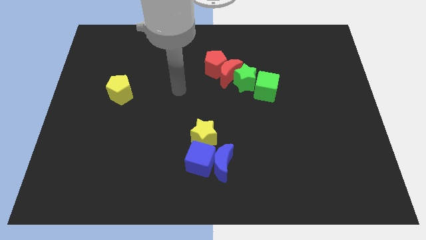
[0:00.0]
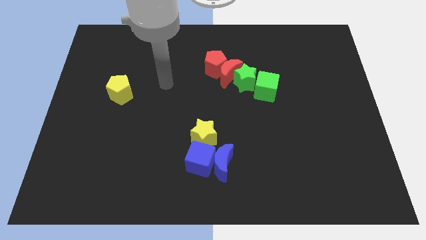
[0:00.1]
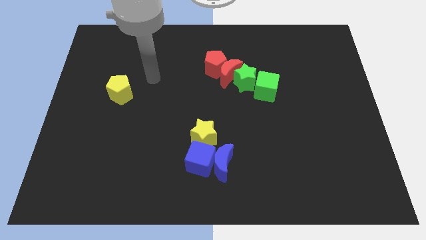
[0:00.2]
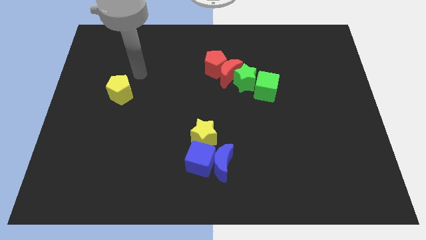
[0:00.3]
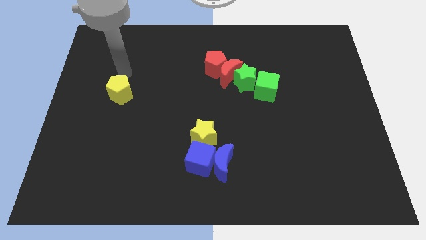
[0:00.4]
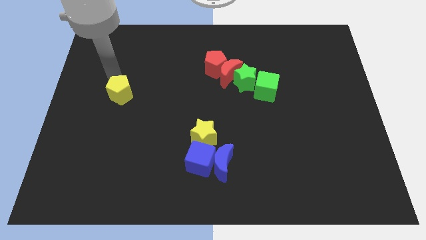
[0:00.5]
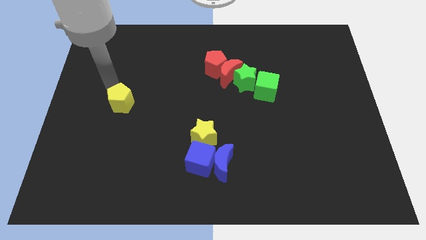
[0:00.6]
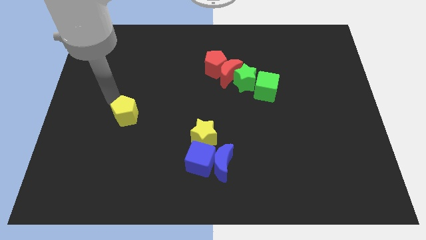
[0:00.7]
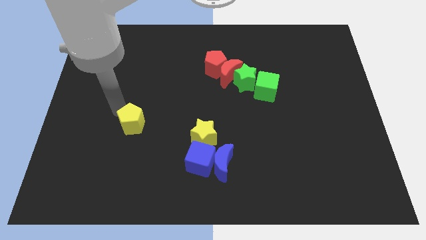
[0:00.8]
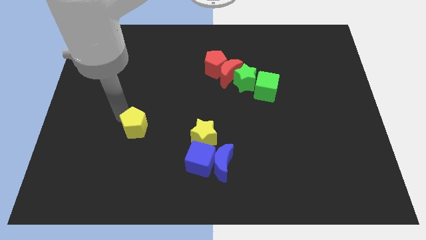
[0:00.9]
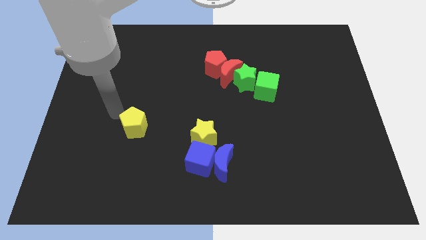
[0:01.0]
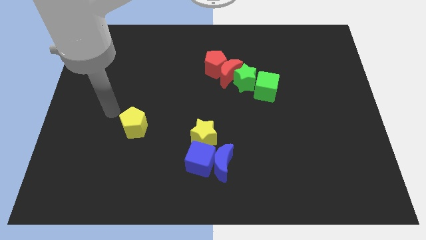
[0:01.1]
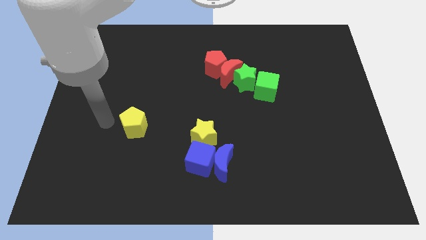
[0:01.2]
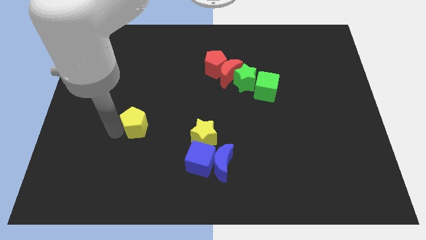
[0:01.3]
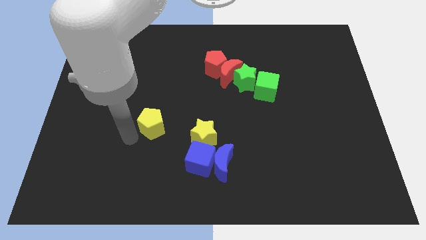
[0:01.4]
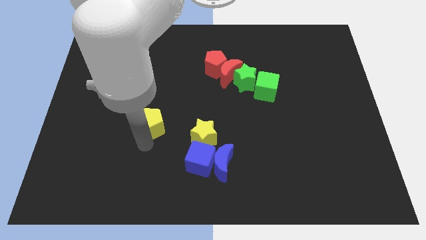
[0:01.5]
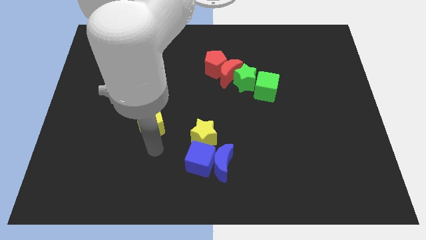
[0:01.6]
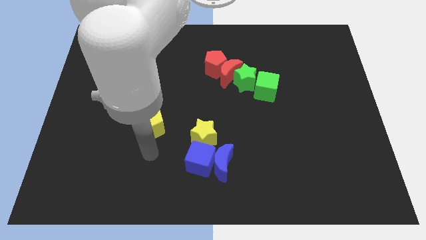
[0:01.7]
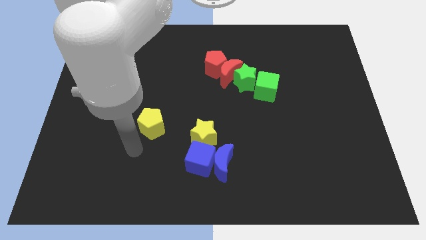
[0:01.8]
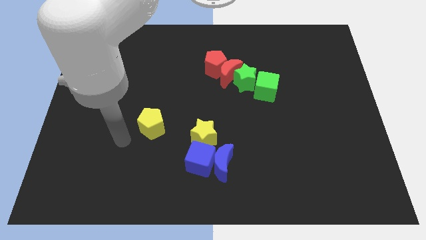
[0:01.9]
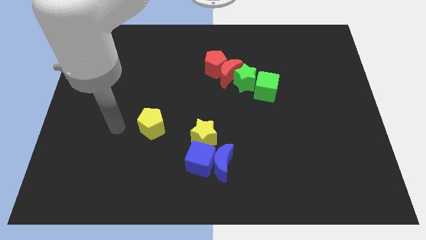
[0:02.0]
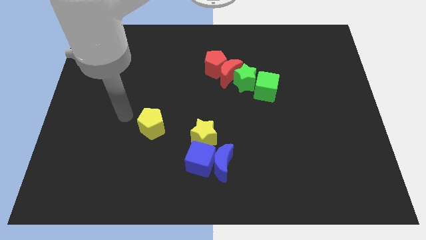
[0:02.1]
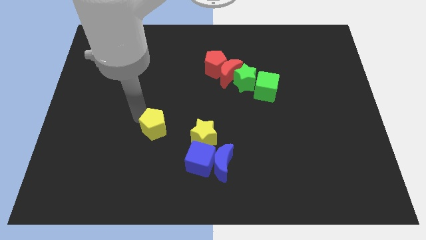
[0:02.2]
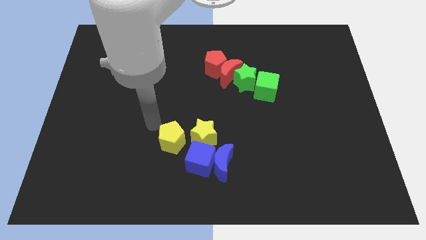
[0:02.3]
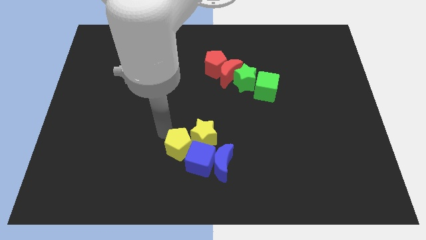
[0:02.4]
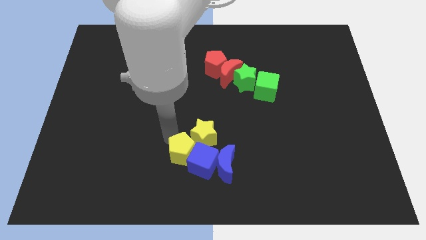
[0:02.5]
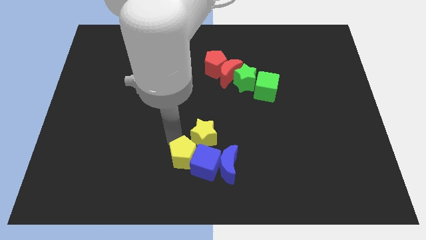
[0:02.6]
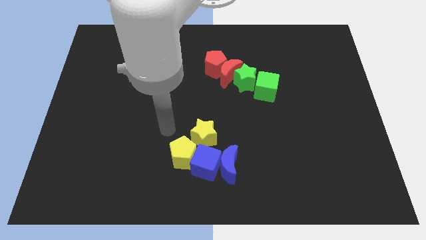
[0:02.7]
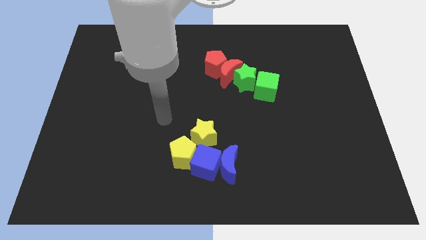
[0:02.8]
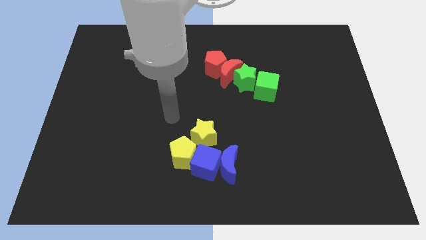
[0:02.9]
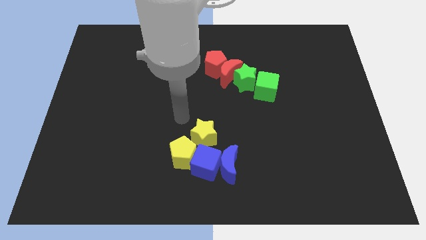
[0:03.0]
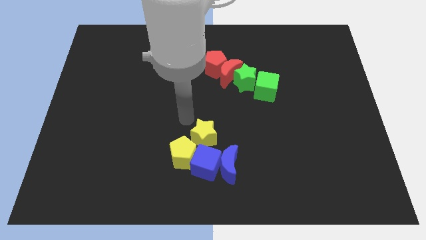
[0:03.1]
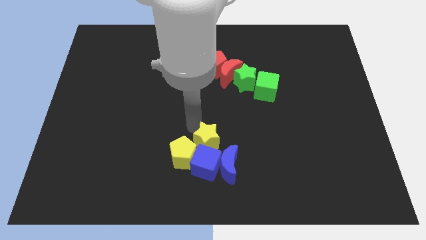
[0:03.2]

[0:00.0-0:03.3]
push the yellow pentagon to the left of the blue cube

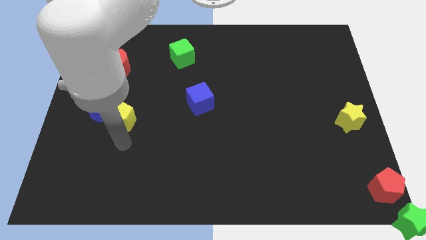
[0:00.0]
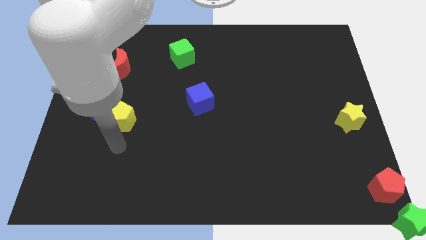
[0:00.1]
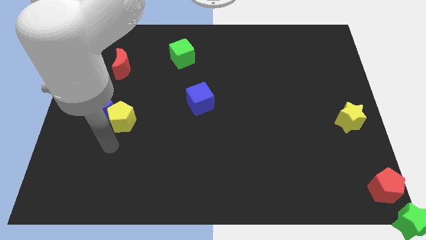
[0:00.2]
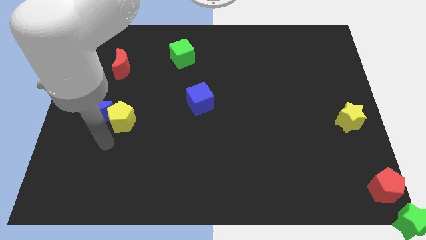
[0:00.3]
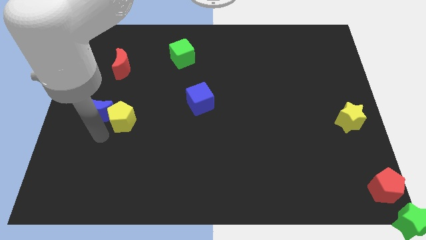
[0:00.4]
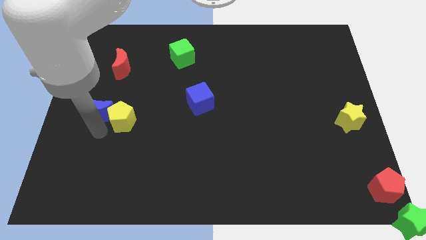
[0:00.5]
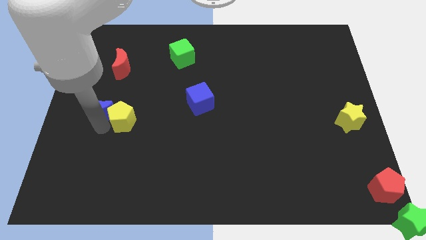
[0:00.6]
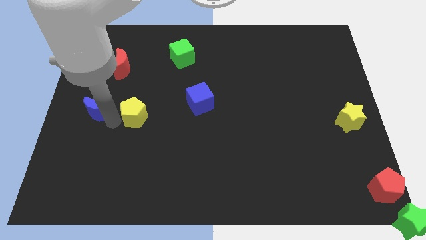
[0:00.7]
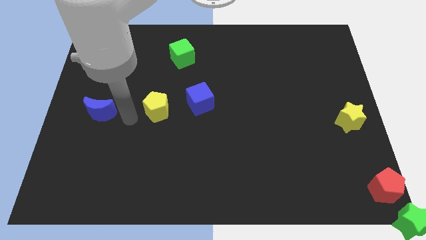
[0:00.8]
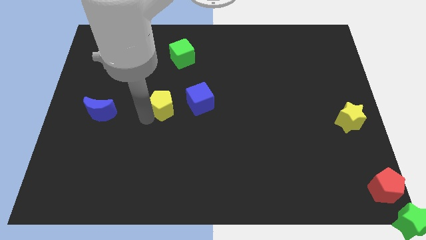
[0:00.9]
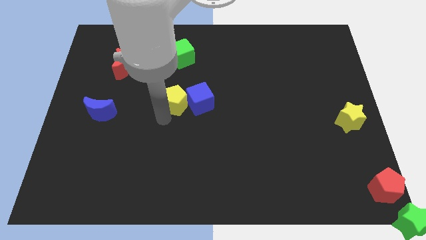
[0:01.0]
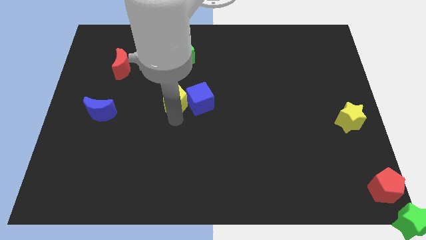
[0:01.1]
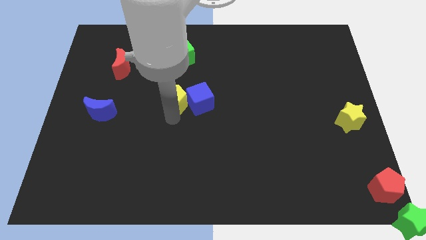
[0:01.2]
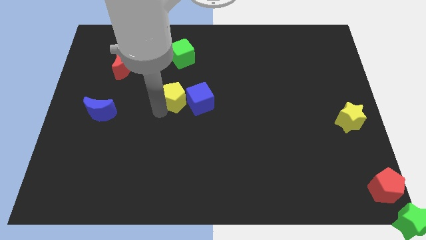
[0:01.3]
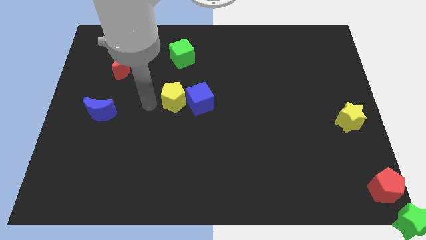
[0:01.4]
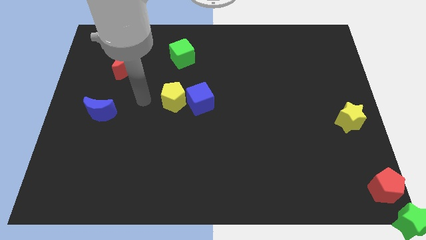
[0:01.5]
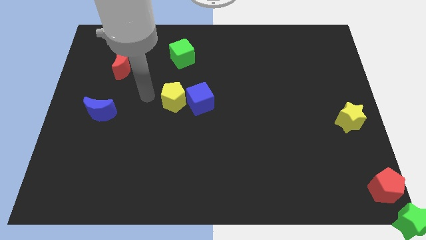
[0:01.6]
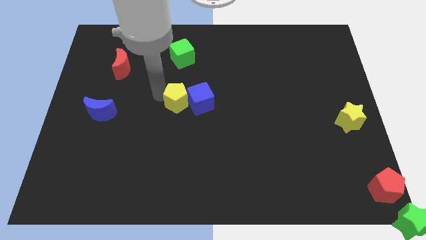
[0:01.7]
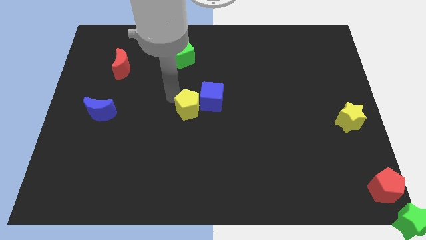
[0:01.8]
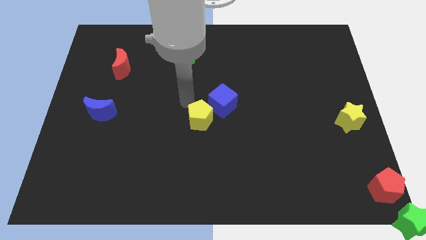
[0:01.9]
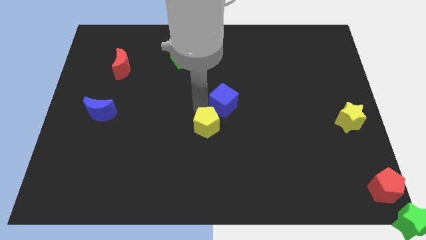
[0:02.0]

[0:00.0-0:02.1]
push the yellow pentagon towards the center

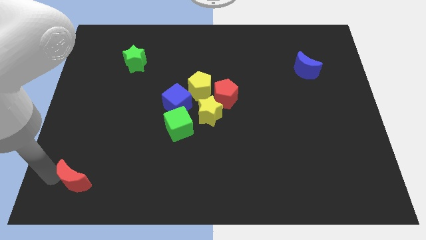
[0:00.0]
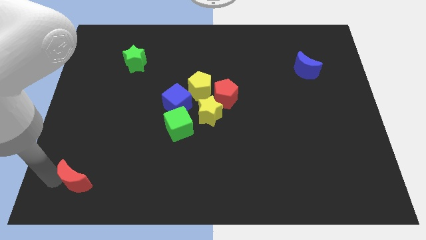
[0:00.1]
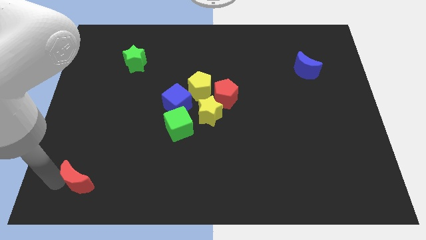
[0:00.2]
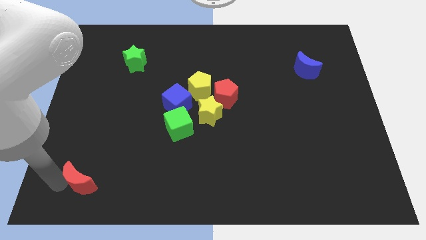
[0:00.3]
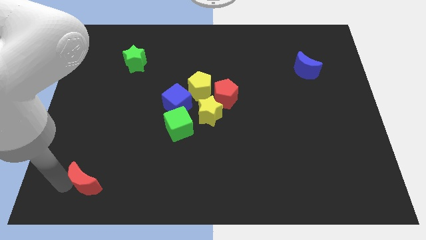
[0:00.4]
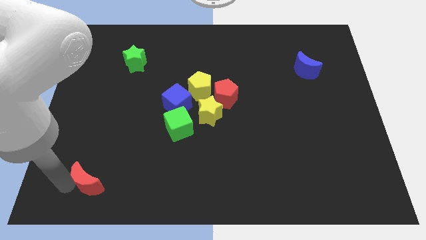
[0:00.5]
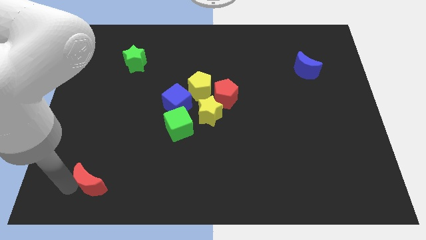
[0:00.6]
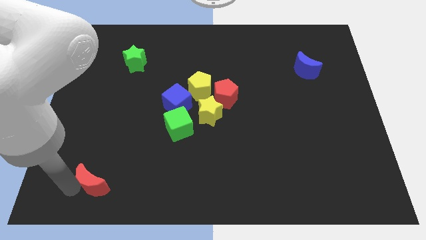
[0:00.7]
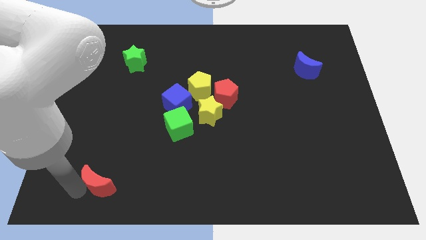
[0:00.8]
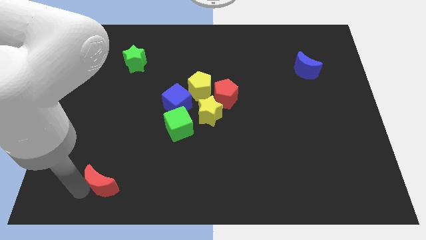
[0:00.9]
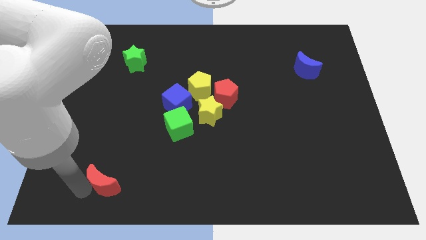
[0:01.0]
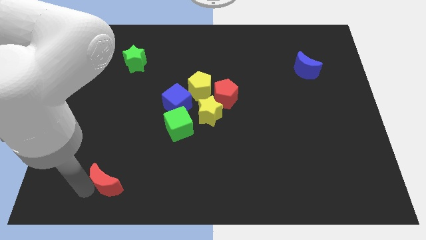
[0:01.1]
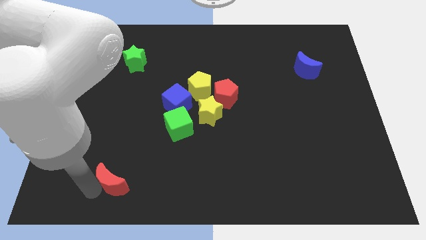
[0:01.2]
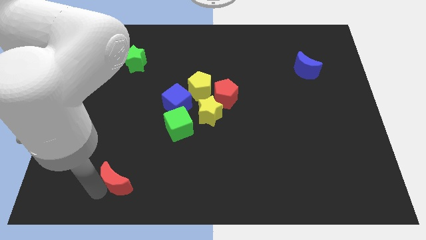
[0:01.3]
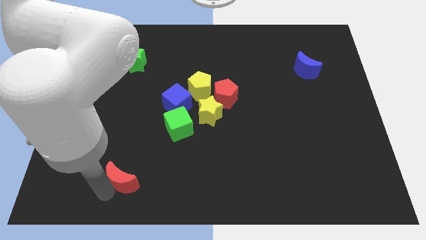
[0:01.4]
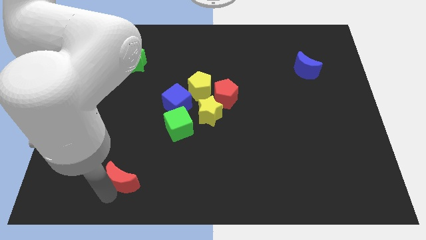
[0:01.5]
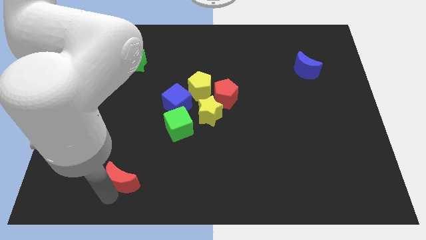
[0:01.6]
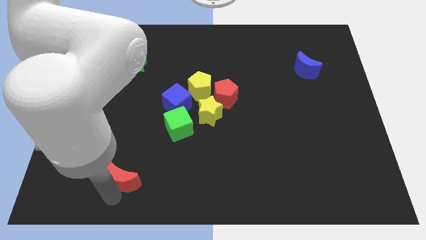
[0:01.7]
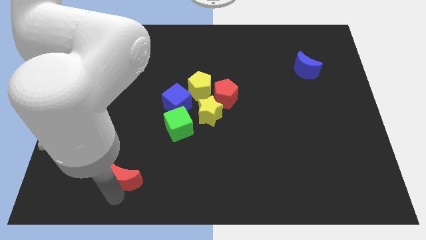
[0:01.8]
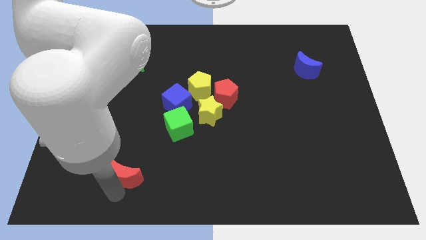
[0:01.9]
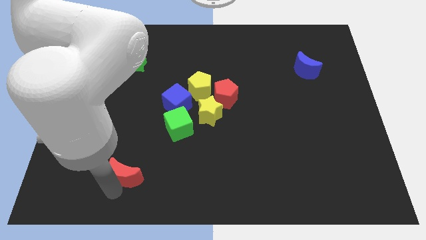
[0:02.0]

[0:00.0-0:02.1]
slightly move the red crescent up a bit

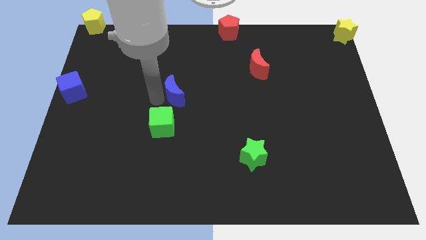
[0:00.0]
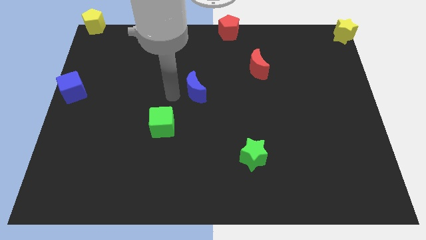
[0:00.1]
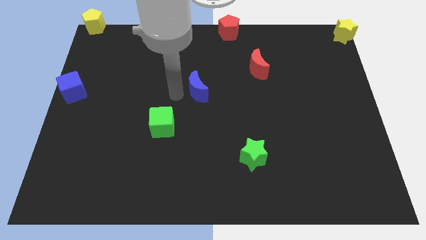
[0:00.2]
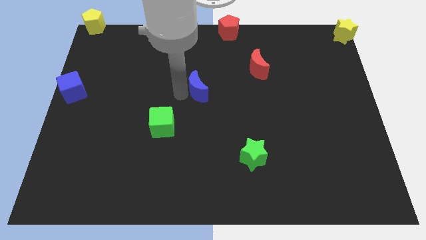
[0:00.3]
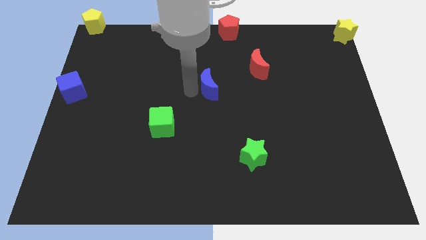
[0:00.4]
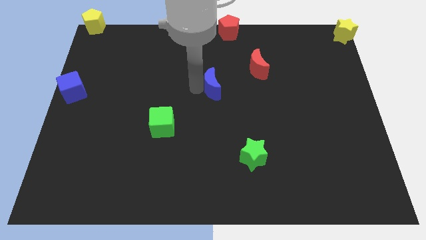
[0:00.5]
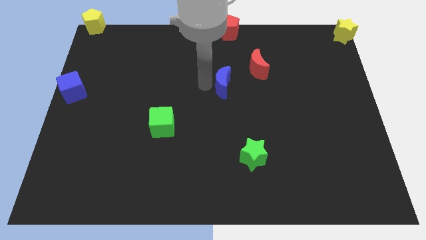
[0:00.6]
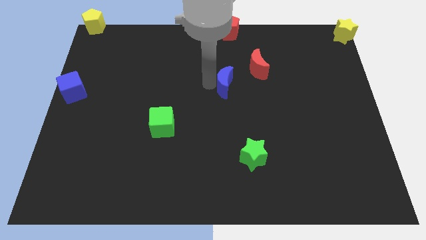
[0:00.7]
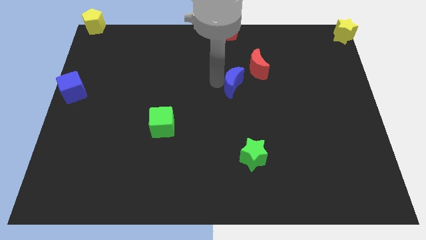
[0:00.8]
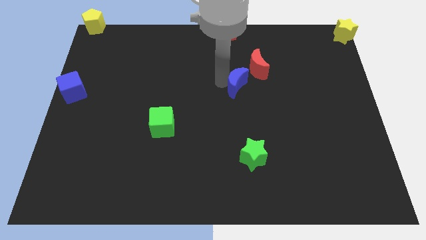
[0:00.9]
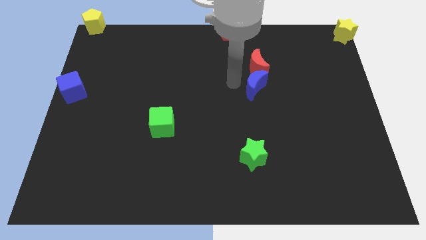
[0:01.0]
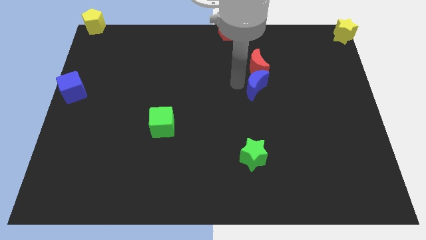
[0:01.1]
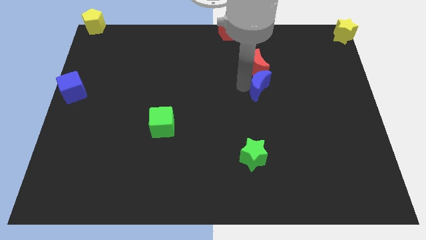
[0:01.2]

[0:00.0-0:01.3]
place blue crescent below red crescent

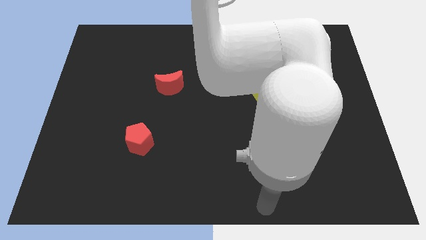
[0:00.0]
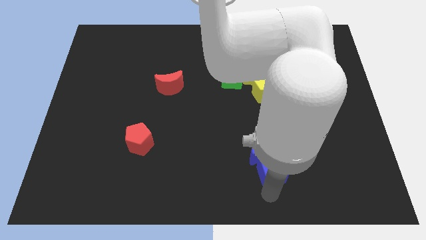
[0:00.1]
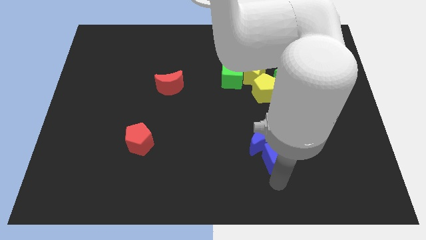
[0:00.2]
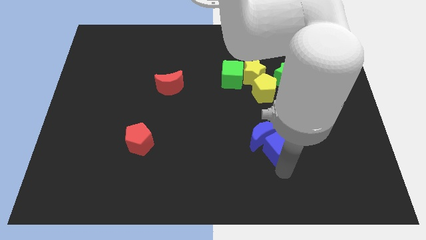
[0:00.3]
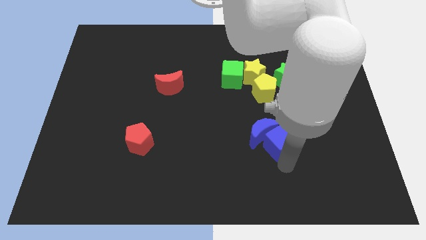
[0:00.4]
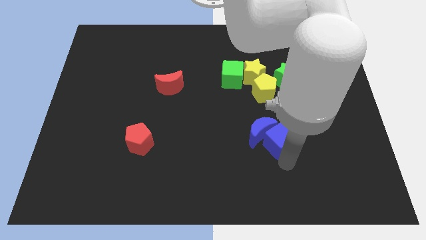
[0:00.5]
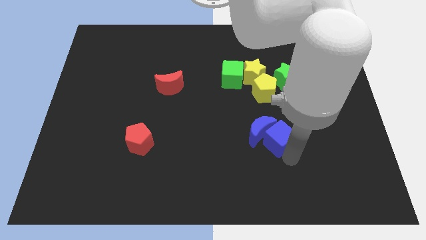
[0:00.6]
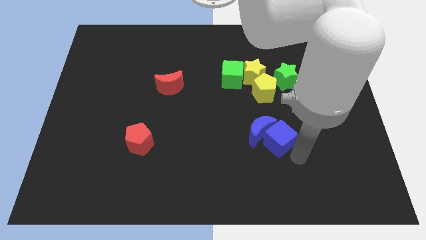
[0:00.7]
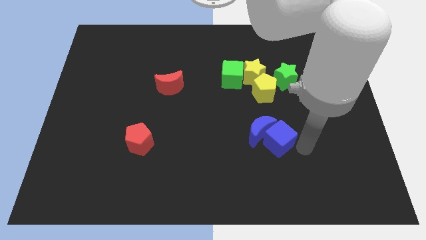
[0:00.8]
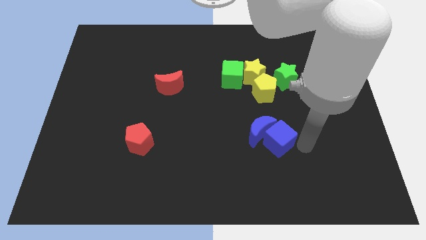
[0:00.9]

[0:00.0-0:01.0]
push blue cube slightly towards upward
